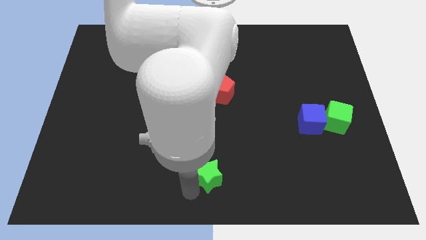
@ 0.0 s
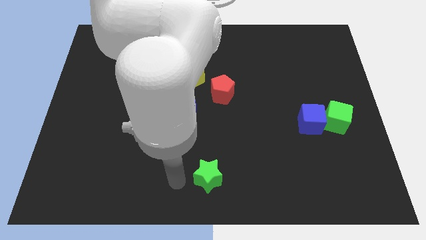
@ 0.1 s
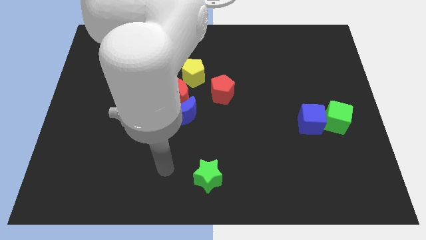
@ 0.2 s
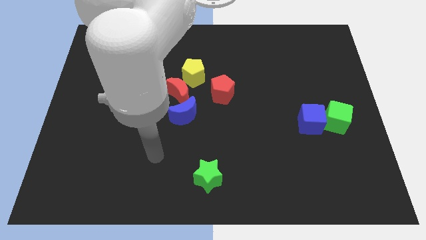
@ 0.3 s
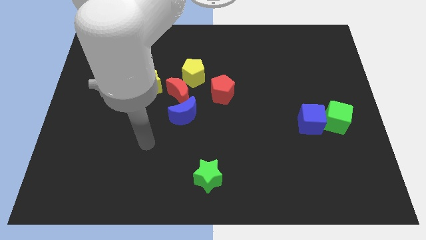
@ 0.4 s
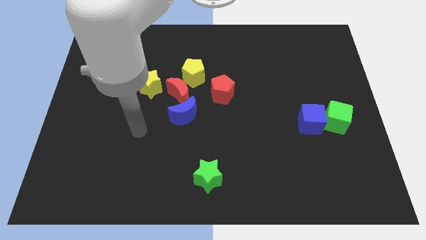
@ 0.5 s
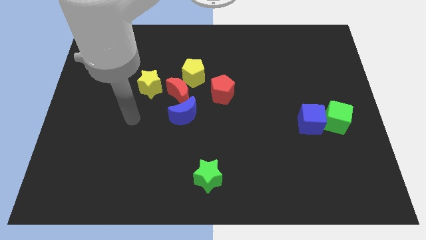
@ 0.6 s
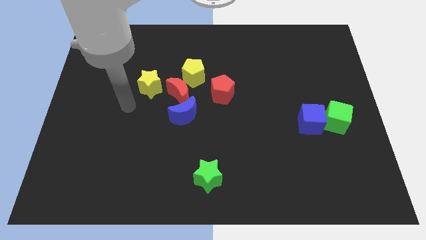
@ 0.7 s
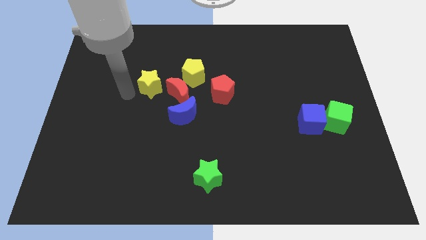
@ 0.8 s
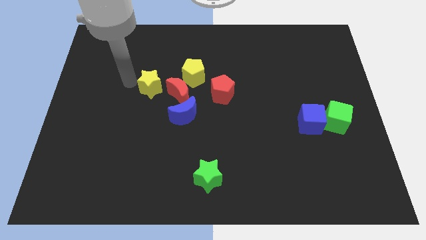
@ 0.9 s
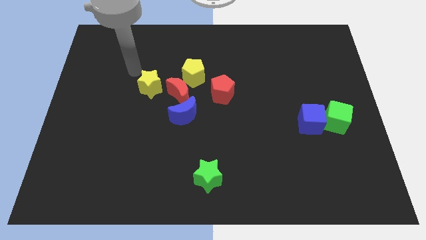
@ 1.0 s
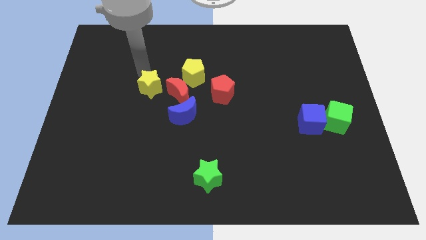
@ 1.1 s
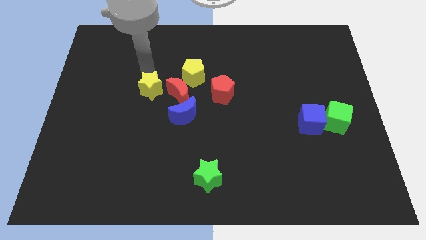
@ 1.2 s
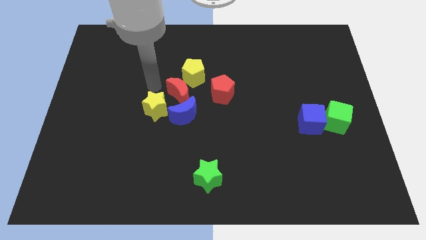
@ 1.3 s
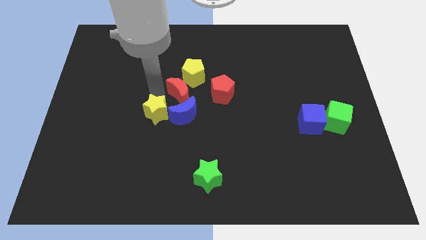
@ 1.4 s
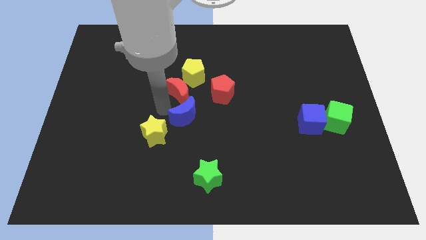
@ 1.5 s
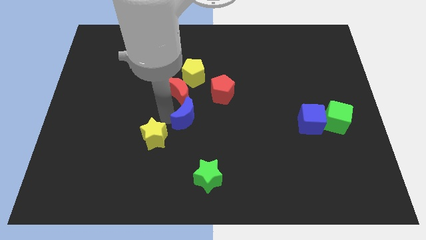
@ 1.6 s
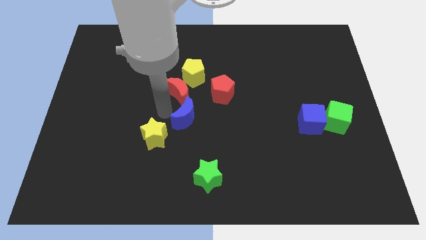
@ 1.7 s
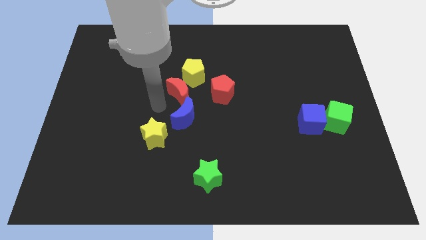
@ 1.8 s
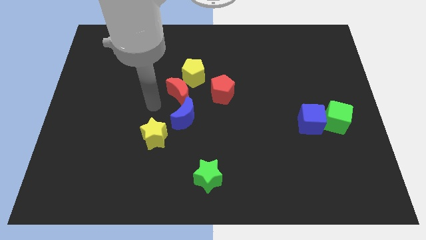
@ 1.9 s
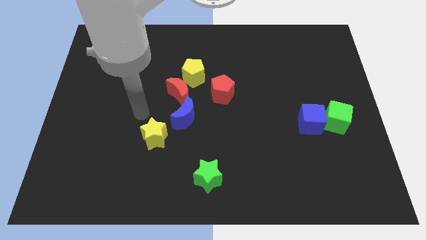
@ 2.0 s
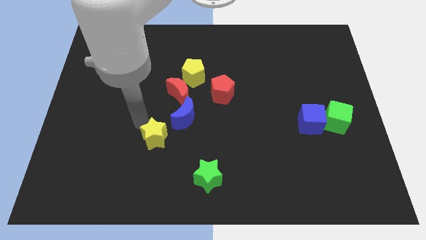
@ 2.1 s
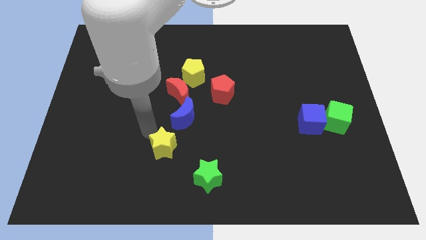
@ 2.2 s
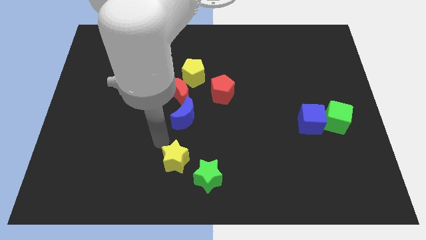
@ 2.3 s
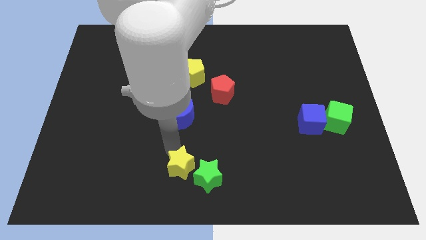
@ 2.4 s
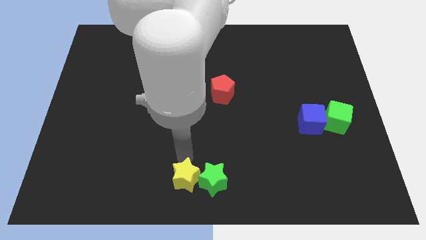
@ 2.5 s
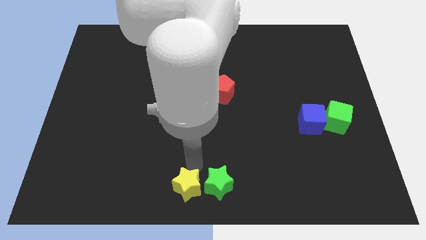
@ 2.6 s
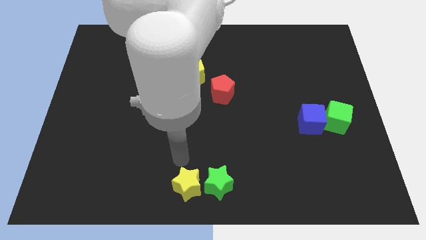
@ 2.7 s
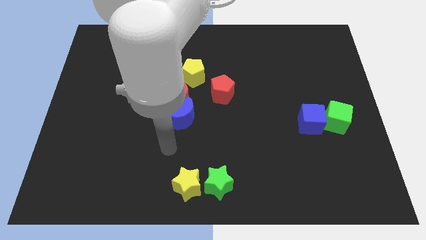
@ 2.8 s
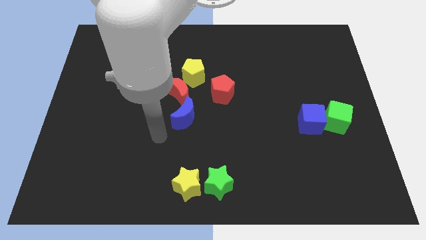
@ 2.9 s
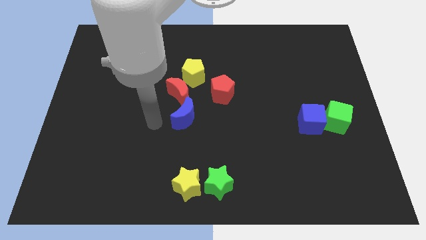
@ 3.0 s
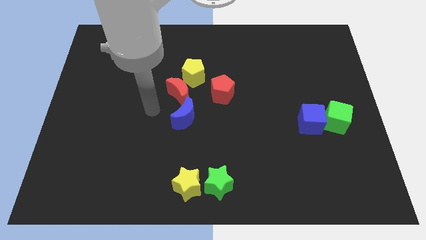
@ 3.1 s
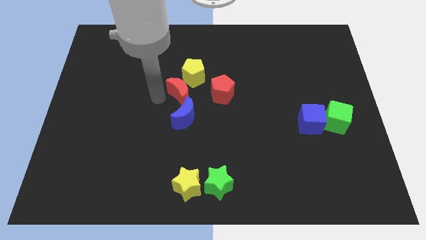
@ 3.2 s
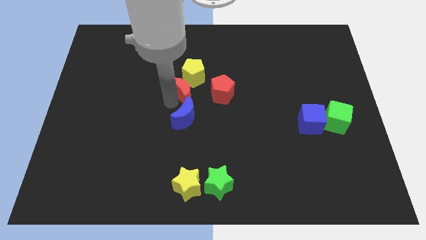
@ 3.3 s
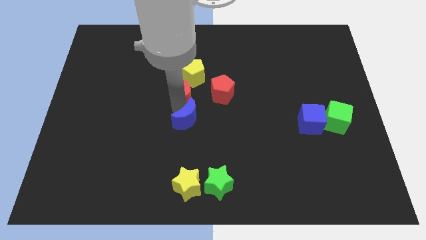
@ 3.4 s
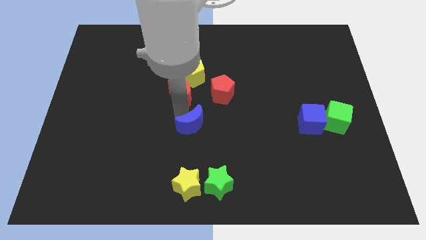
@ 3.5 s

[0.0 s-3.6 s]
push the yellow star into the green star

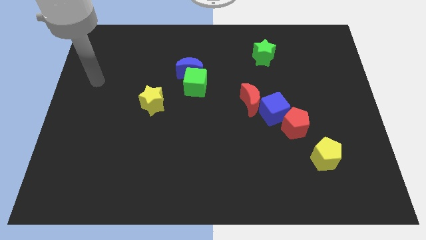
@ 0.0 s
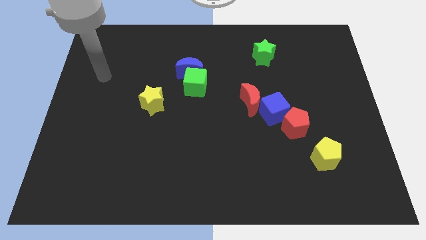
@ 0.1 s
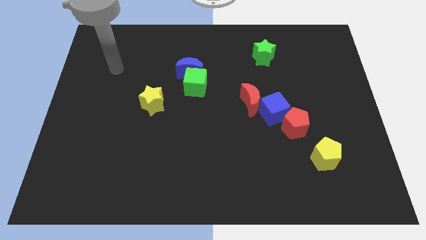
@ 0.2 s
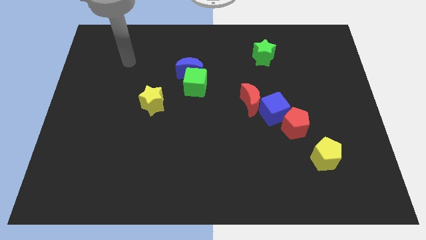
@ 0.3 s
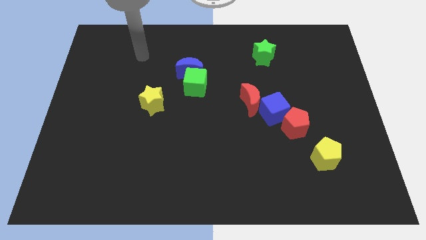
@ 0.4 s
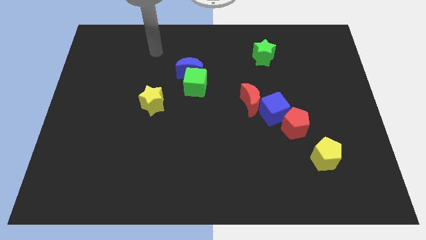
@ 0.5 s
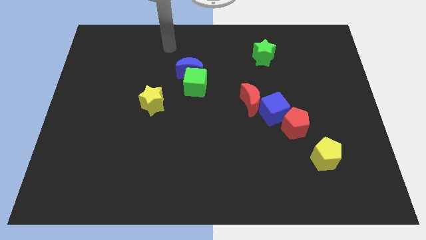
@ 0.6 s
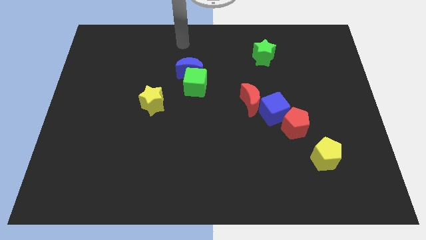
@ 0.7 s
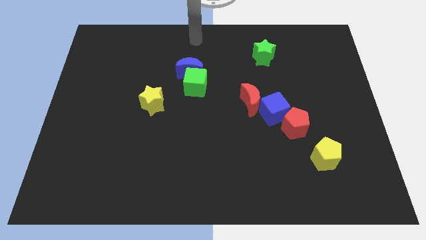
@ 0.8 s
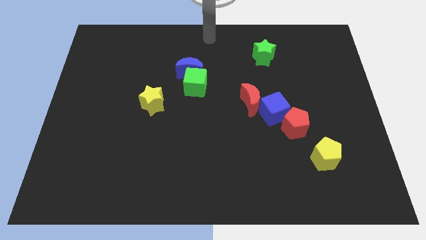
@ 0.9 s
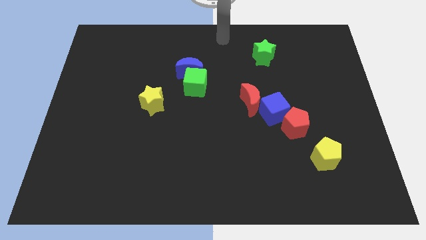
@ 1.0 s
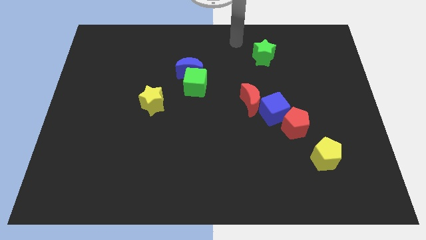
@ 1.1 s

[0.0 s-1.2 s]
place your hand at top center of the board

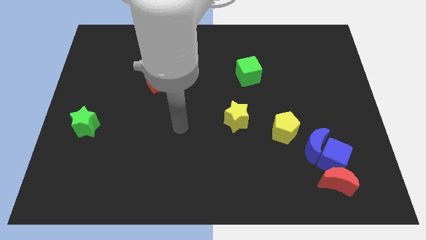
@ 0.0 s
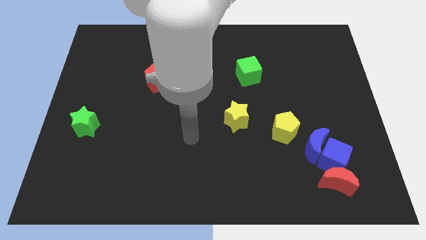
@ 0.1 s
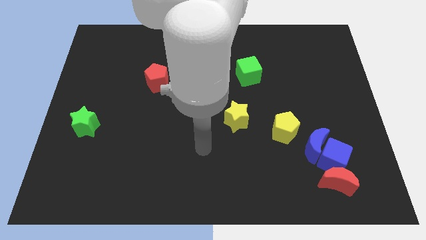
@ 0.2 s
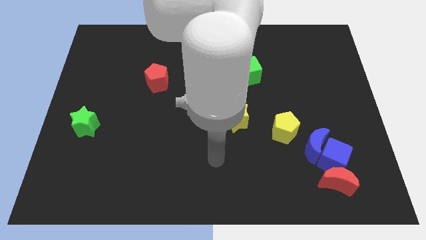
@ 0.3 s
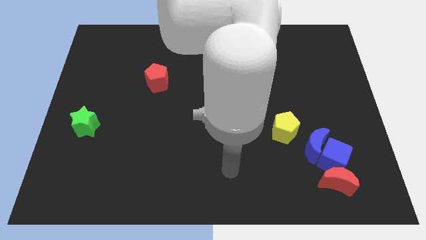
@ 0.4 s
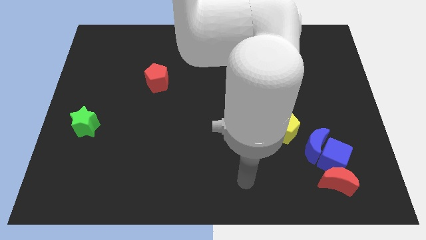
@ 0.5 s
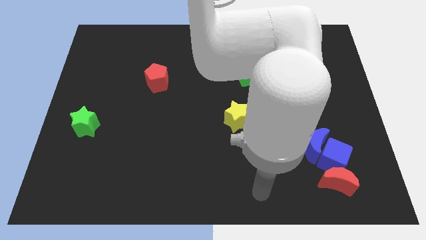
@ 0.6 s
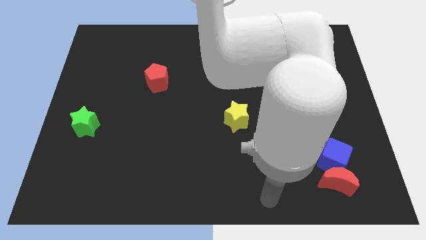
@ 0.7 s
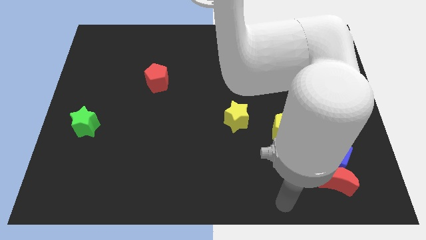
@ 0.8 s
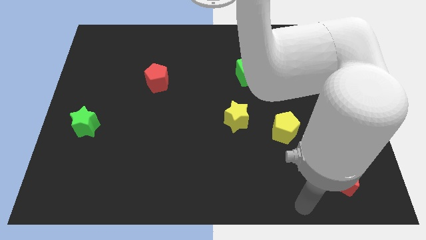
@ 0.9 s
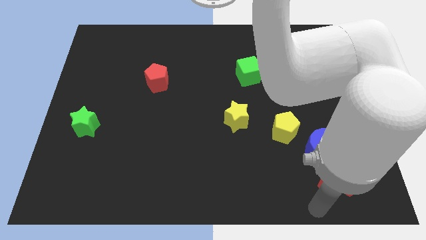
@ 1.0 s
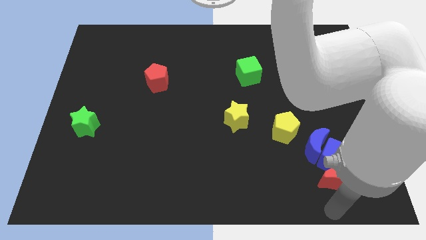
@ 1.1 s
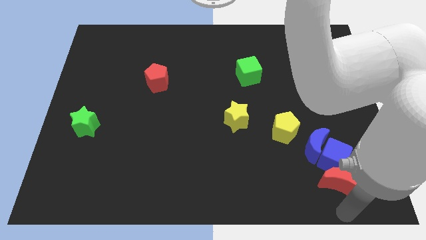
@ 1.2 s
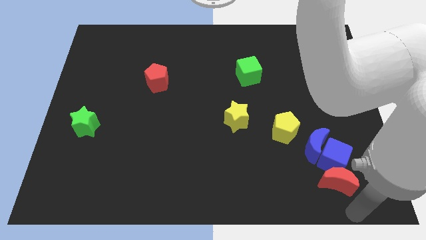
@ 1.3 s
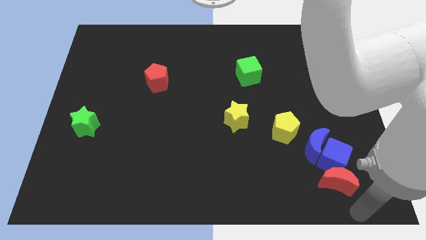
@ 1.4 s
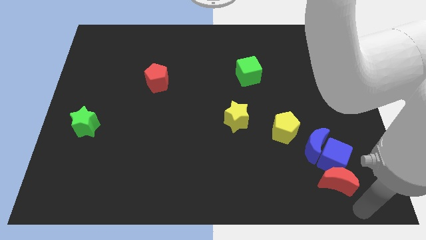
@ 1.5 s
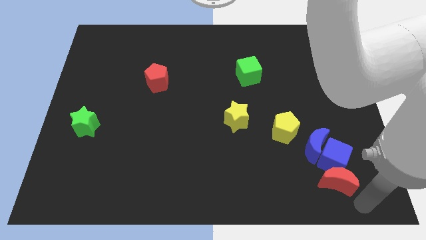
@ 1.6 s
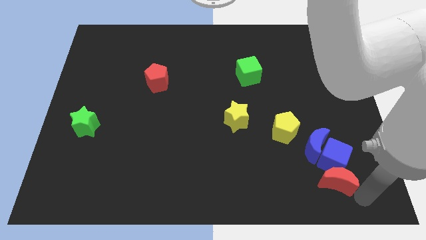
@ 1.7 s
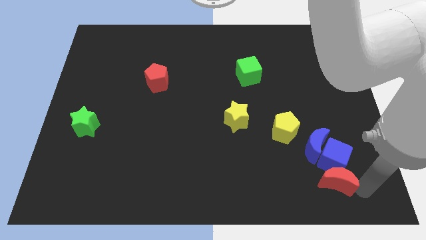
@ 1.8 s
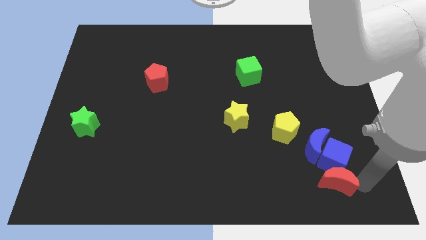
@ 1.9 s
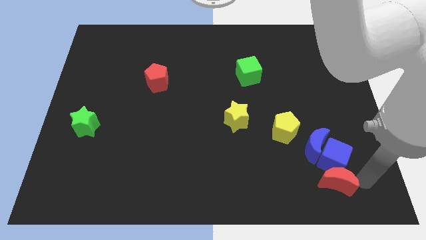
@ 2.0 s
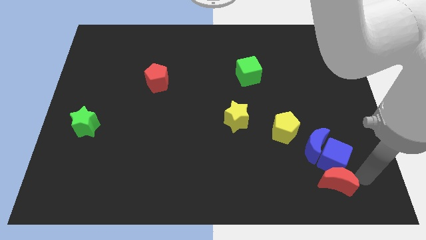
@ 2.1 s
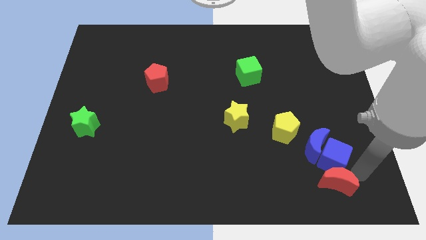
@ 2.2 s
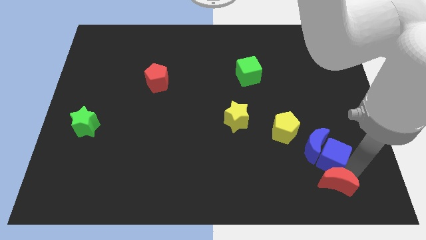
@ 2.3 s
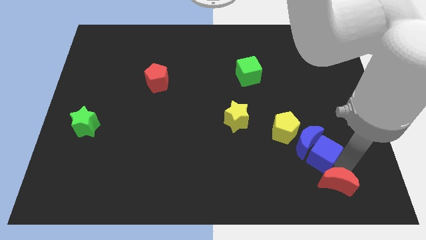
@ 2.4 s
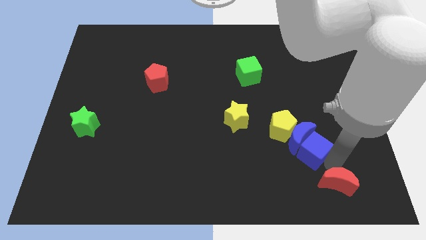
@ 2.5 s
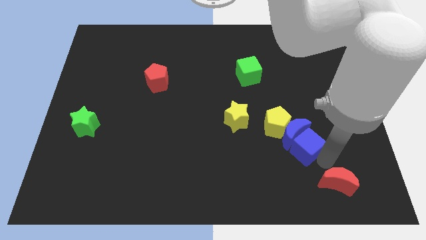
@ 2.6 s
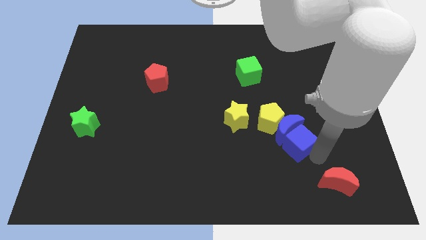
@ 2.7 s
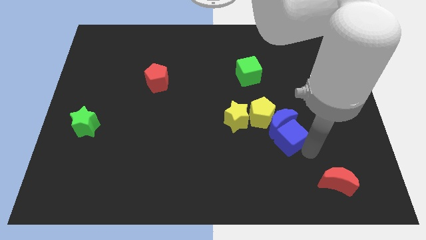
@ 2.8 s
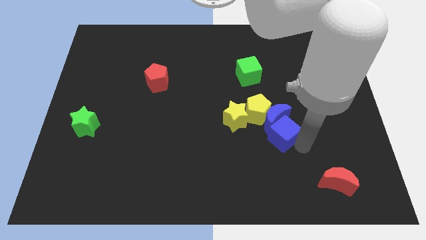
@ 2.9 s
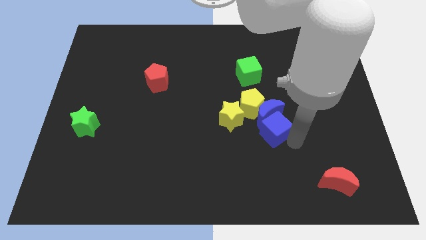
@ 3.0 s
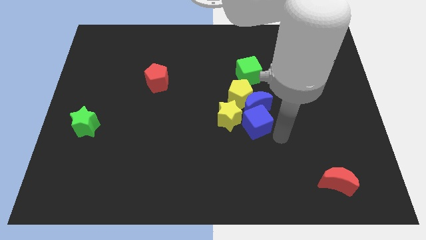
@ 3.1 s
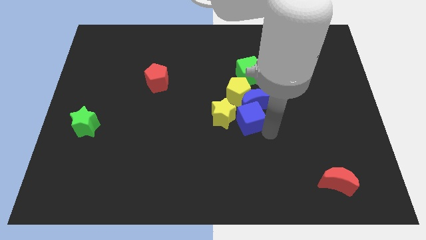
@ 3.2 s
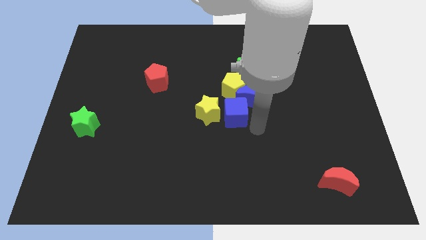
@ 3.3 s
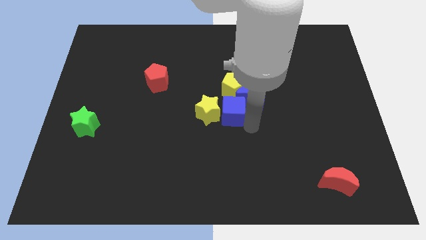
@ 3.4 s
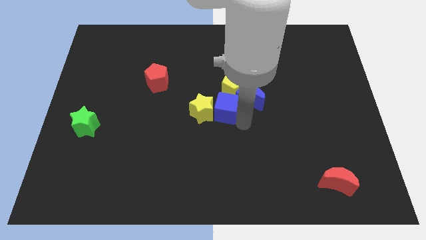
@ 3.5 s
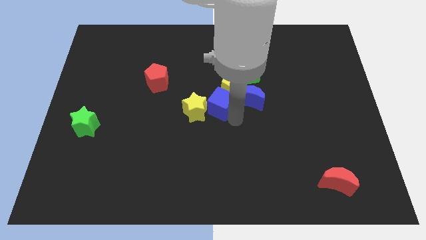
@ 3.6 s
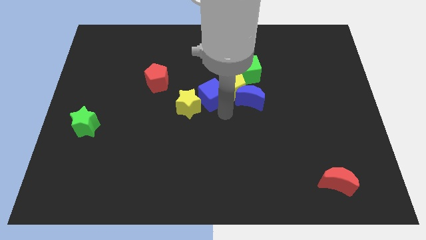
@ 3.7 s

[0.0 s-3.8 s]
place blue moon to the center of the board
